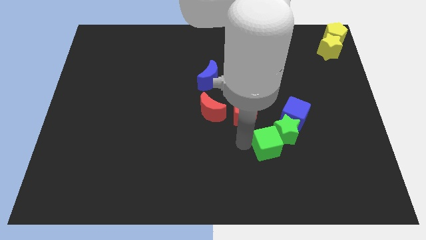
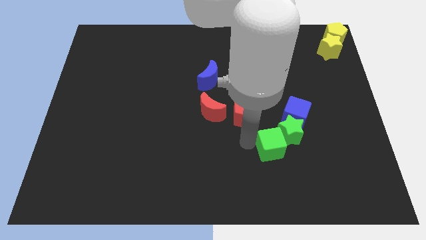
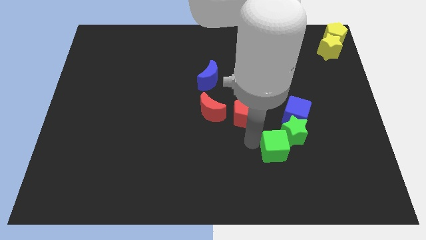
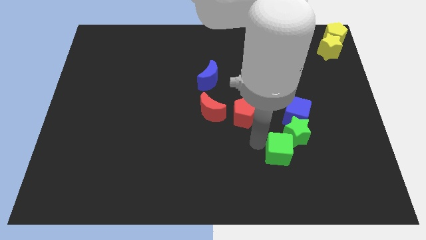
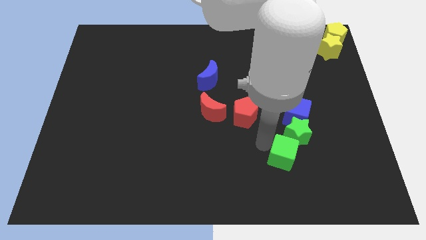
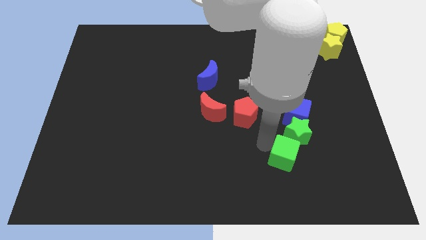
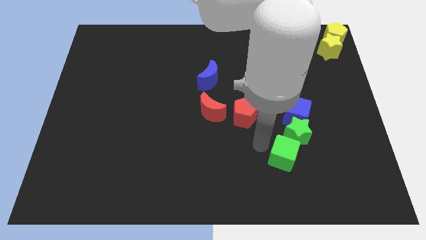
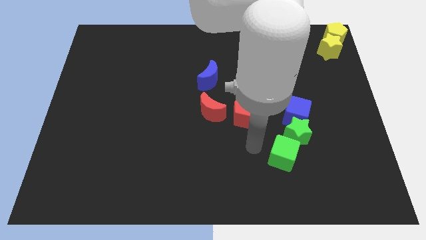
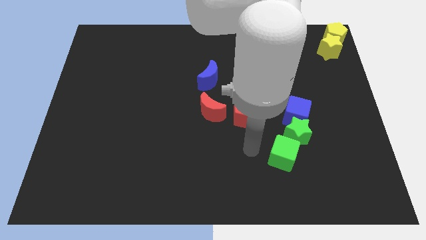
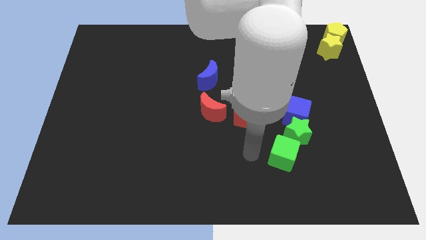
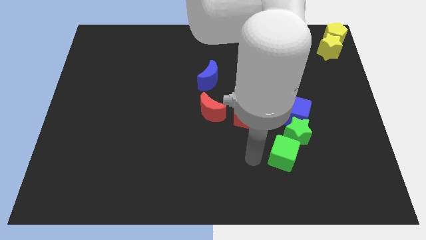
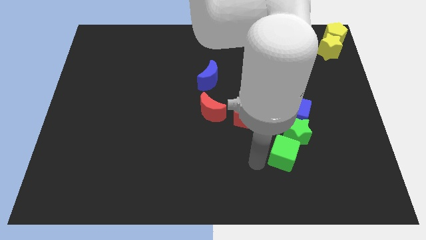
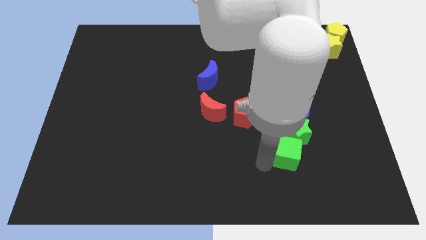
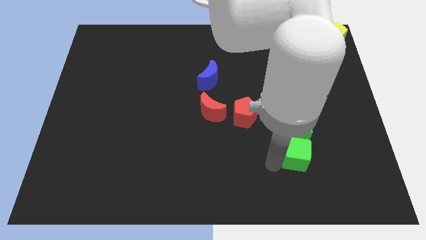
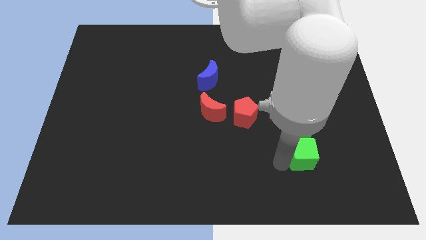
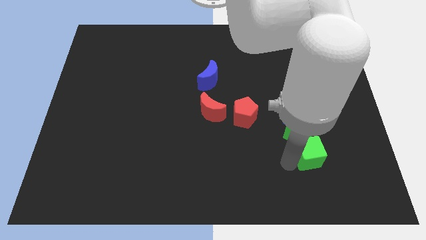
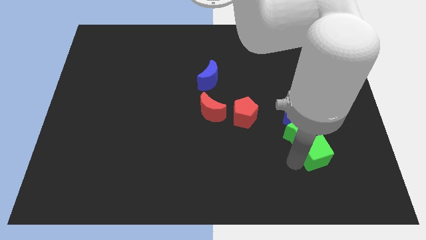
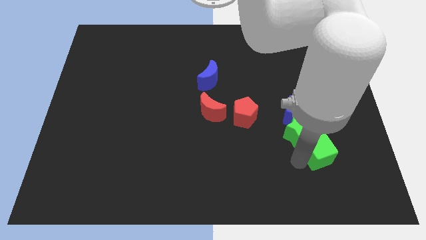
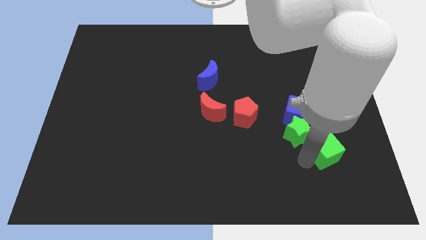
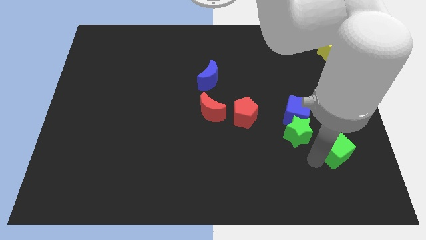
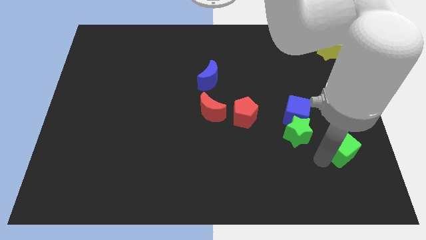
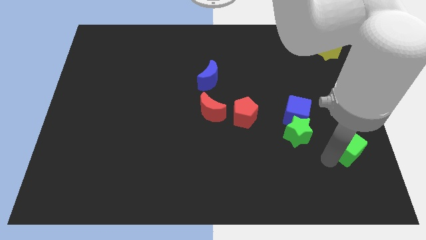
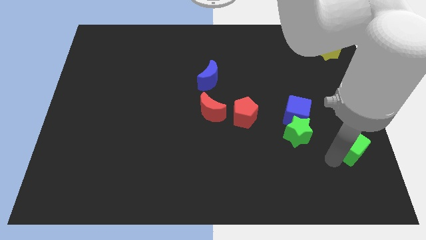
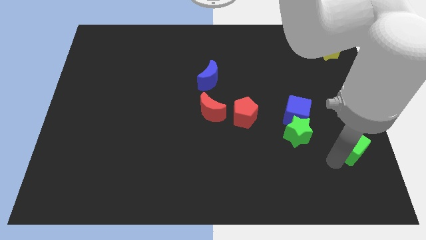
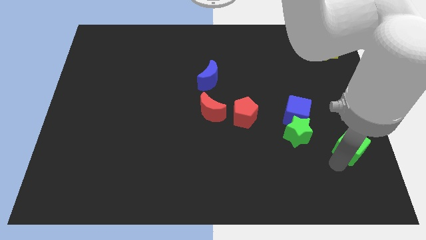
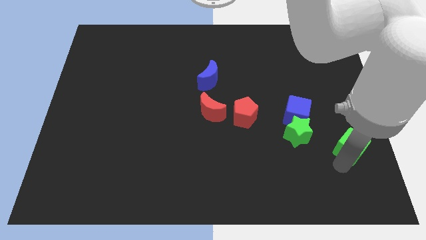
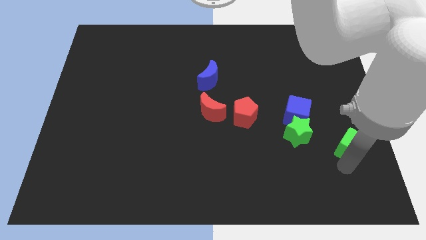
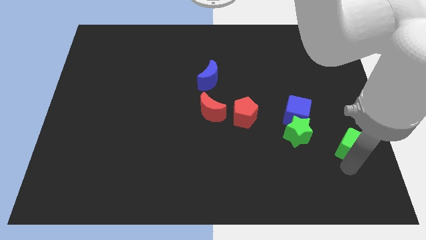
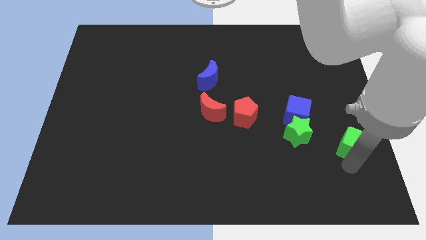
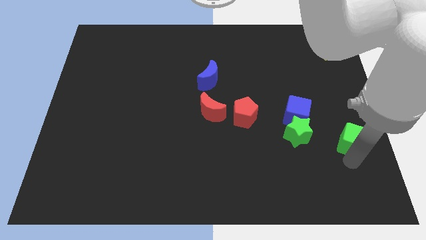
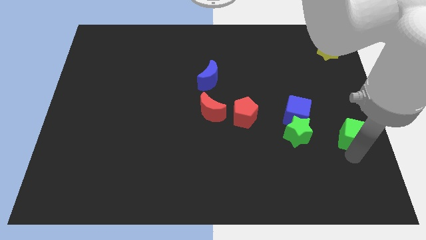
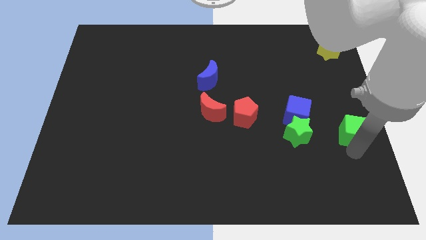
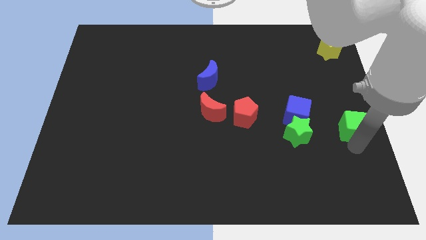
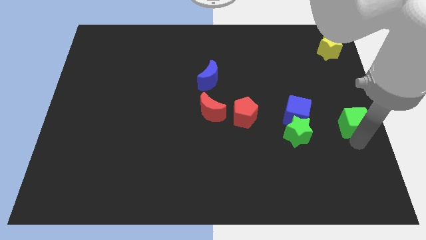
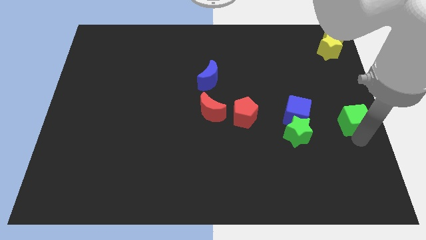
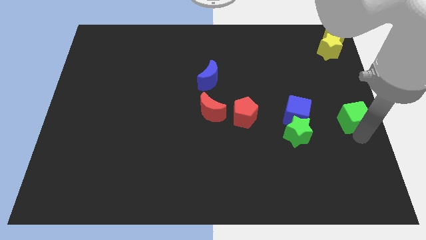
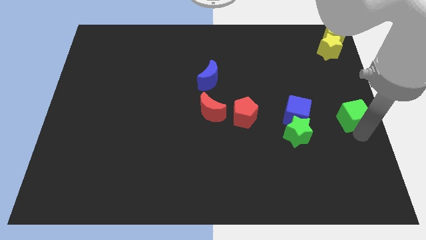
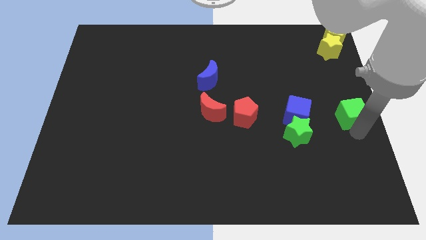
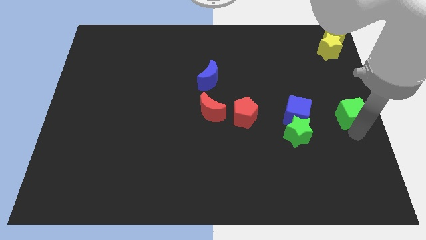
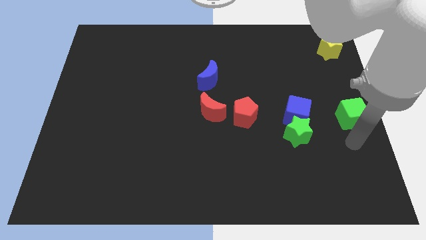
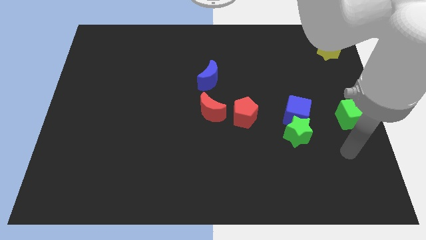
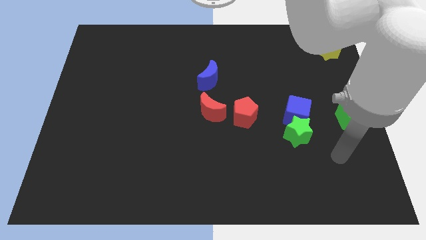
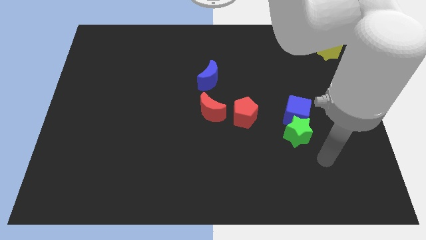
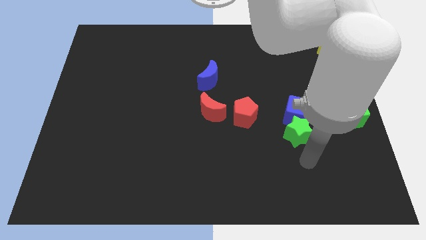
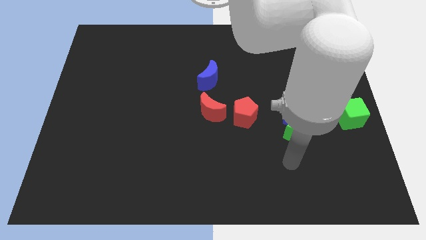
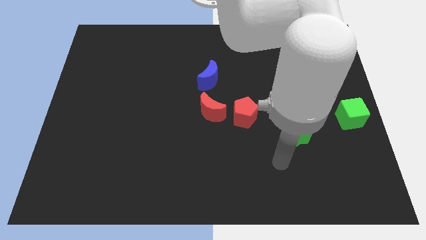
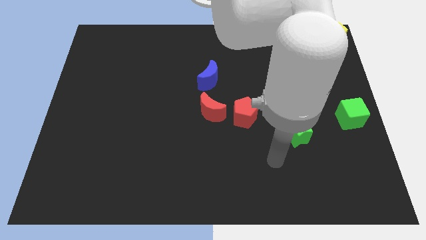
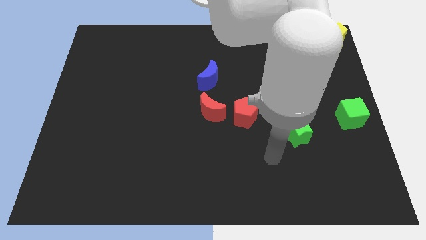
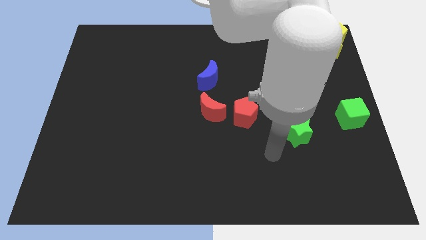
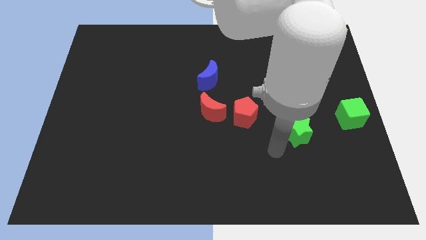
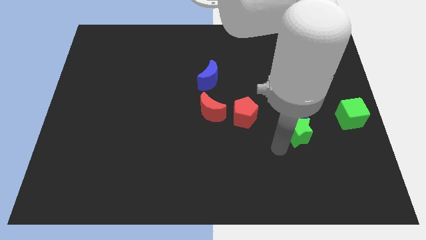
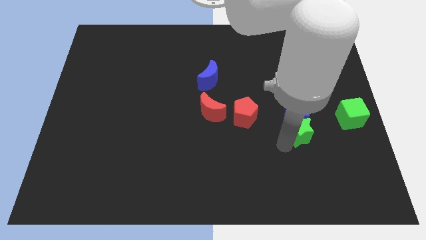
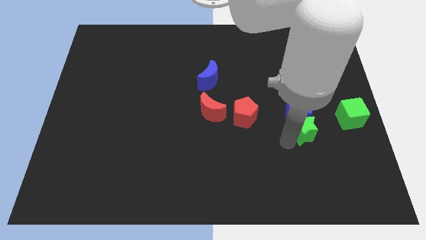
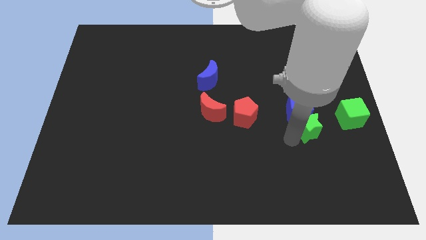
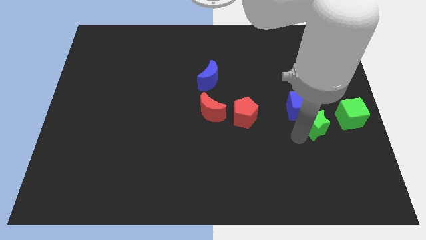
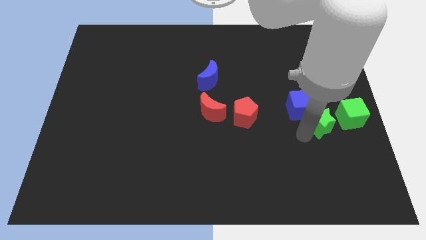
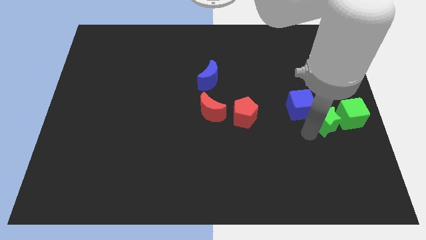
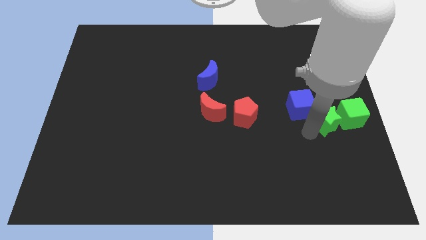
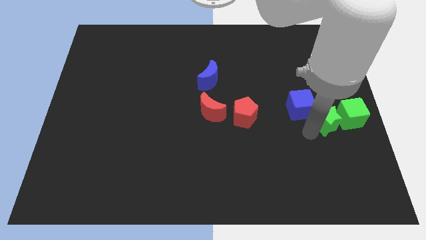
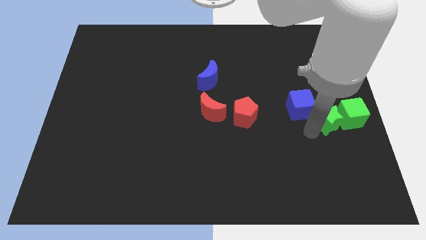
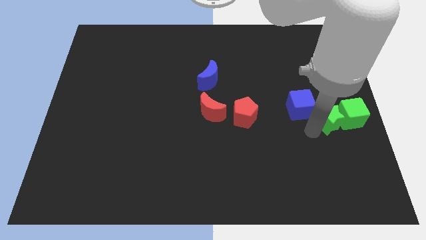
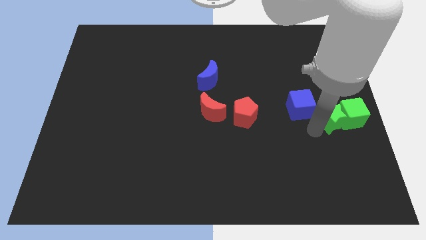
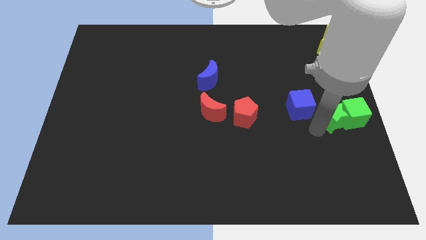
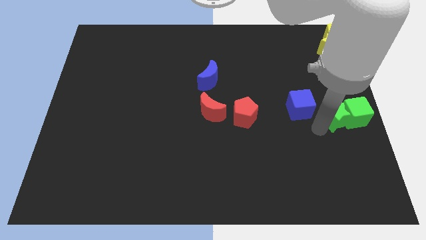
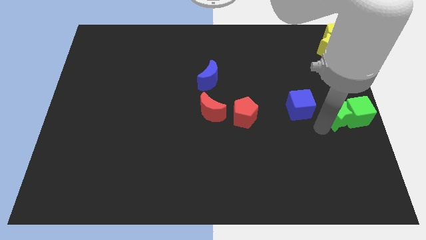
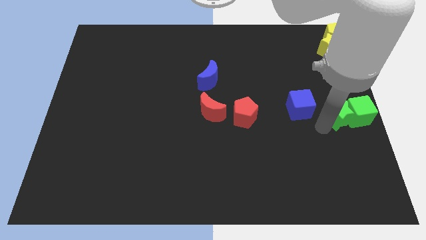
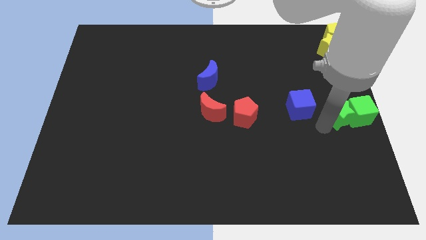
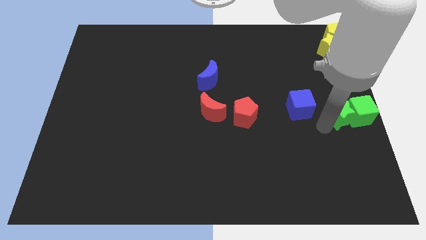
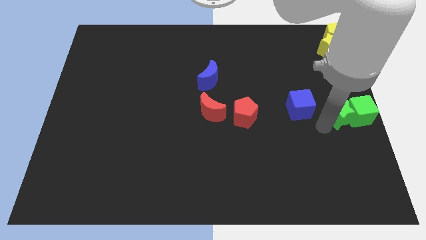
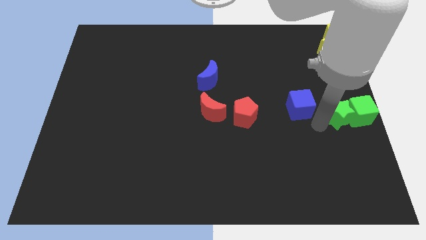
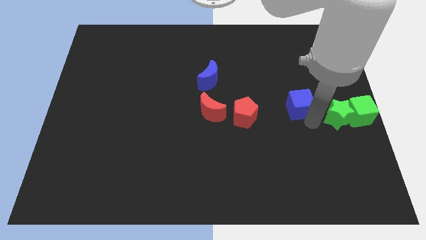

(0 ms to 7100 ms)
move green star and green cube to the right center

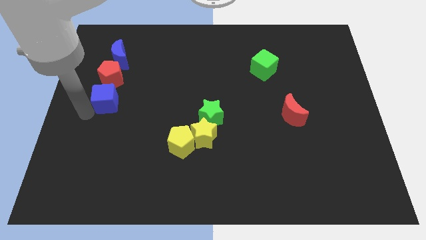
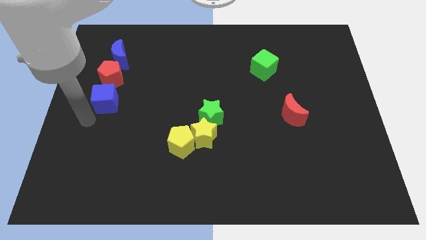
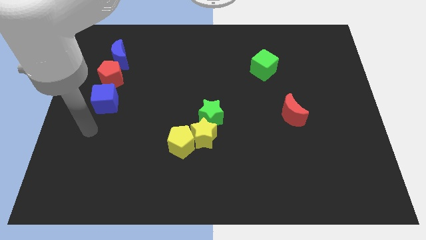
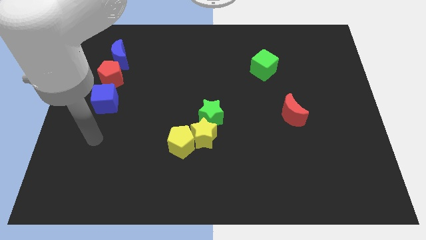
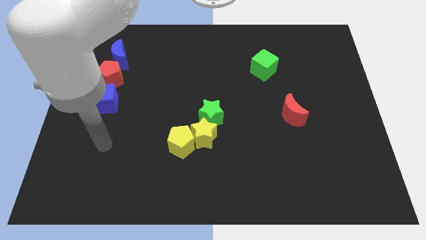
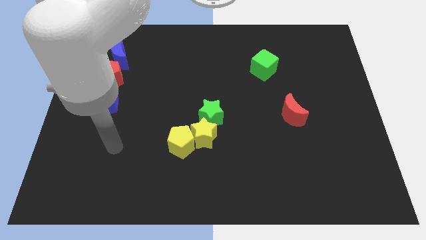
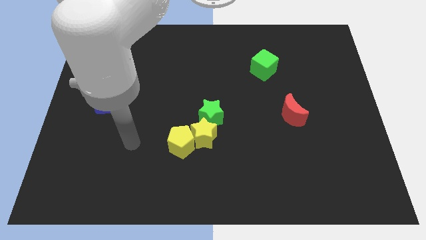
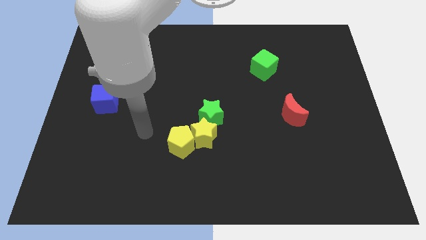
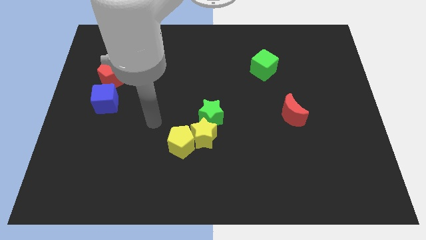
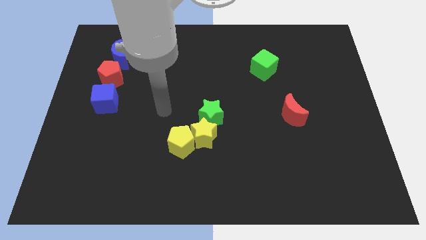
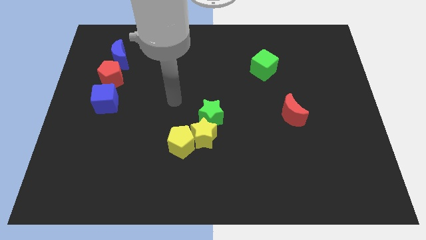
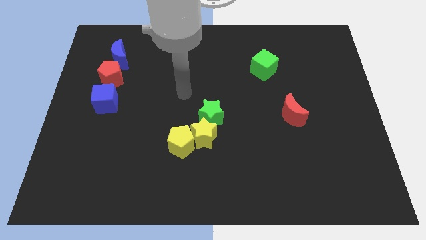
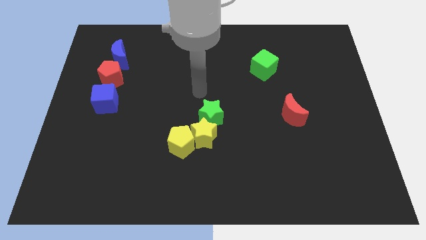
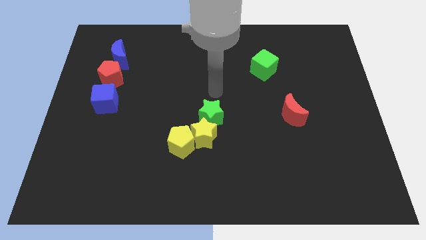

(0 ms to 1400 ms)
move your arm away from the blue cube

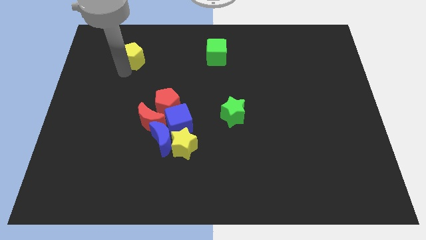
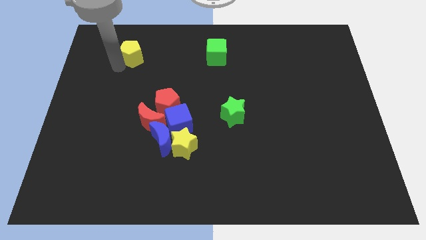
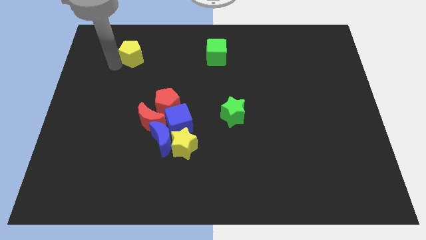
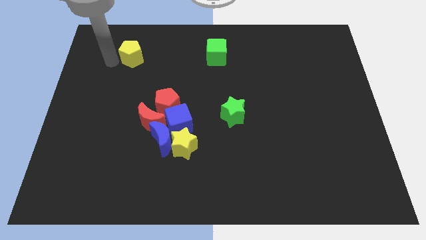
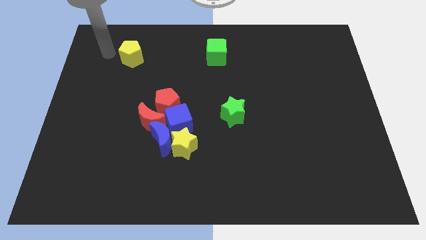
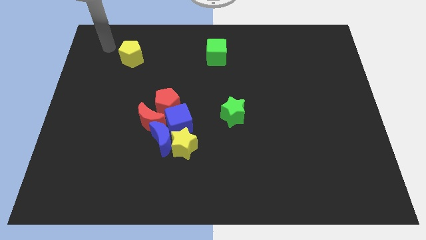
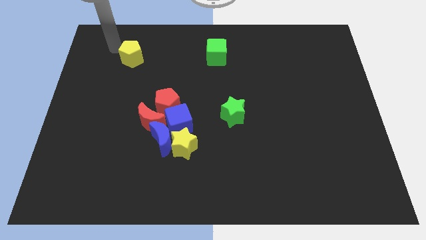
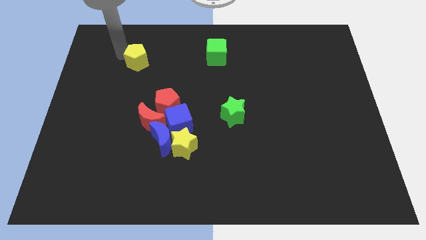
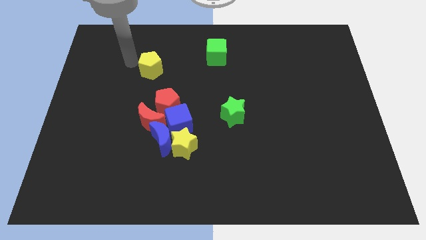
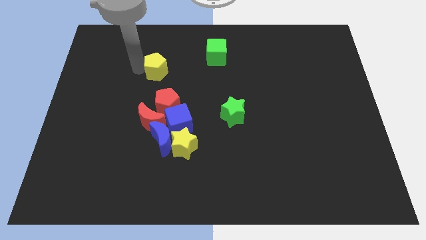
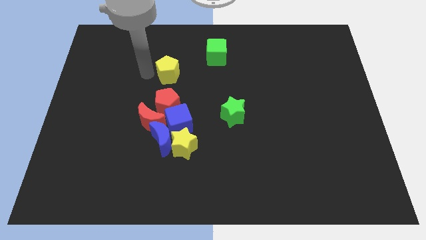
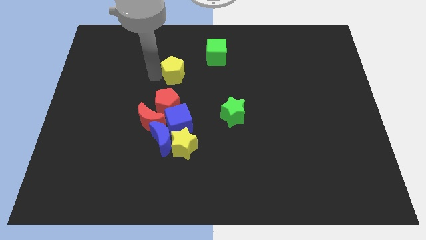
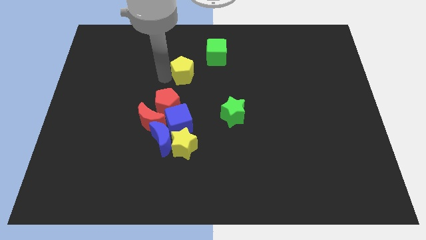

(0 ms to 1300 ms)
move the yellow pentagon to the top of the red pentagon
